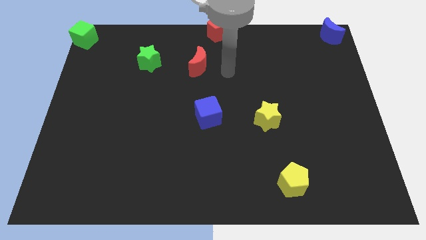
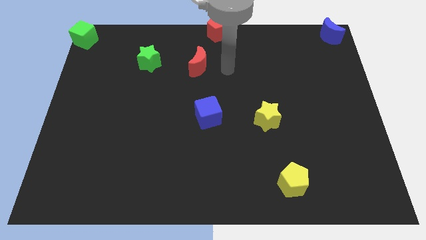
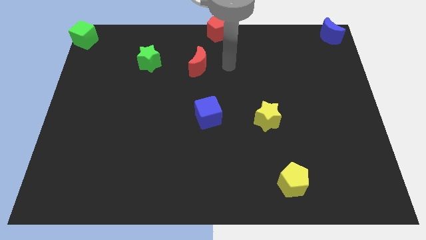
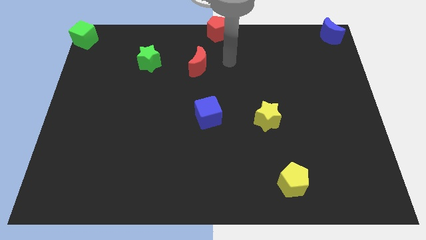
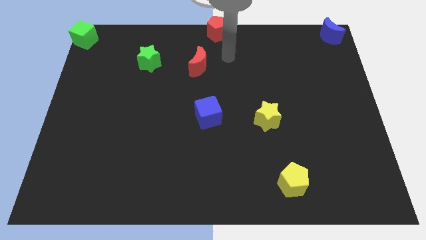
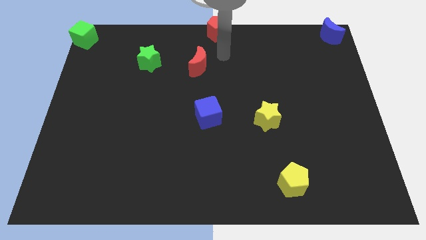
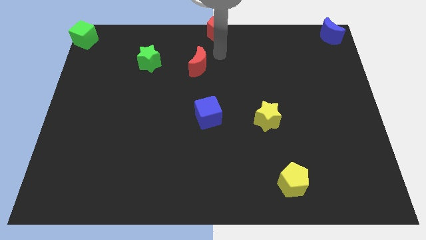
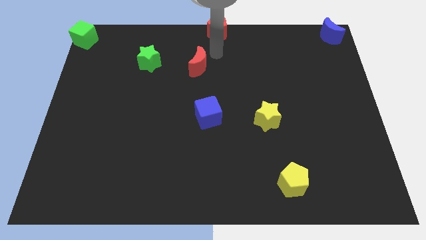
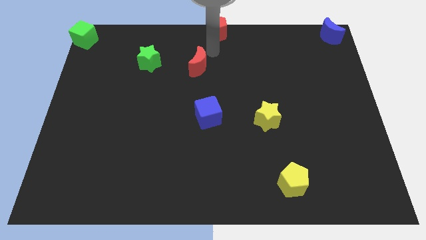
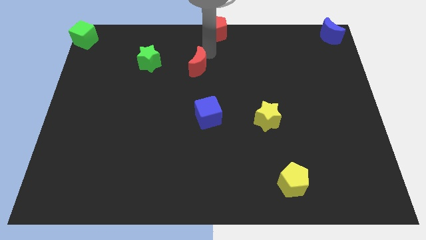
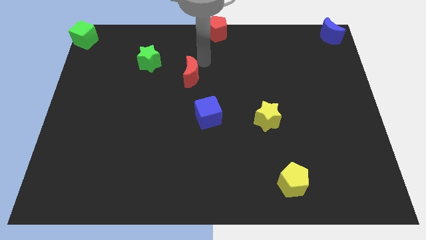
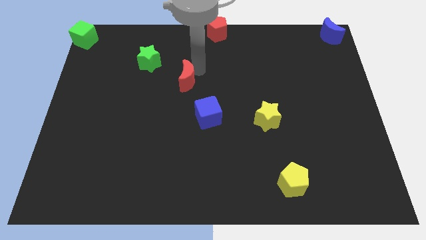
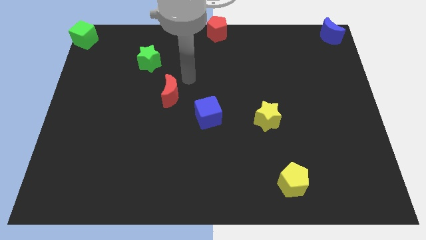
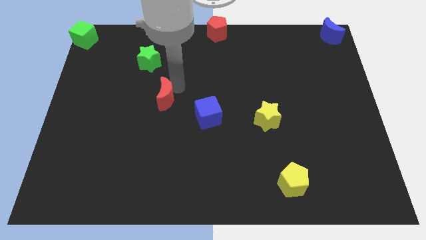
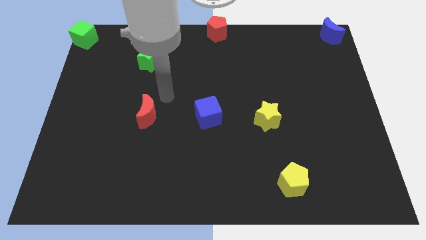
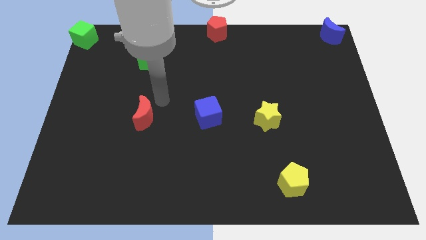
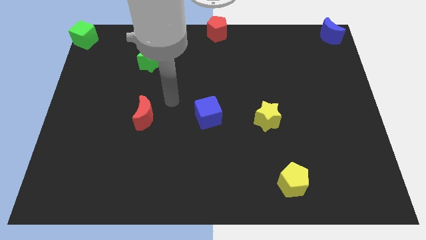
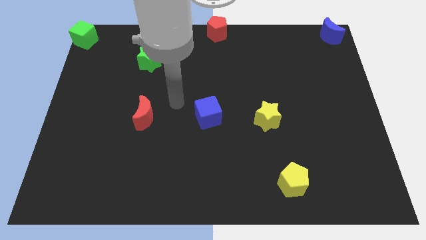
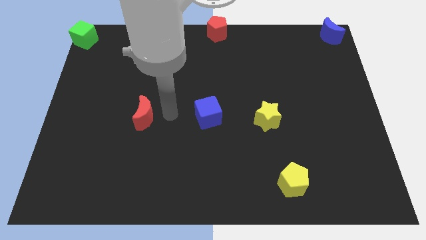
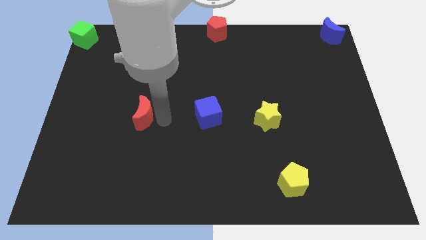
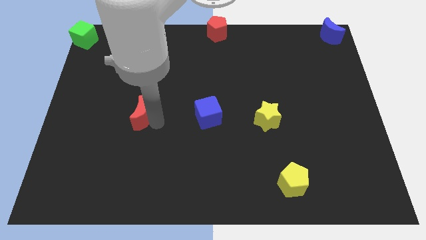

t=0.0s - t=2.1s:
move red moon to the left of blue cube

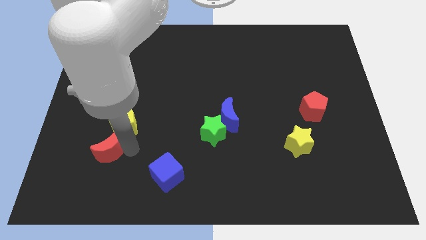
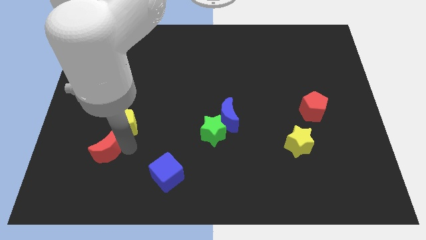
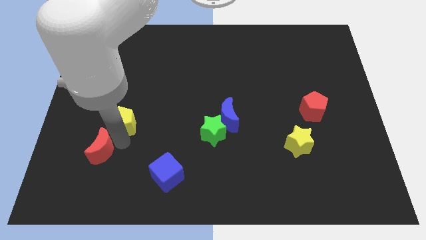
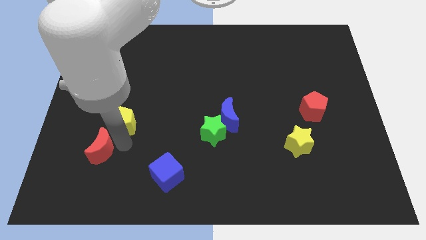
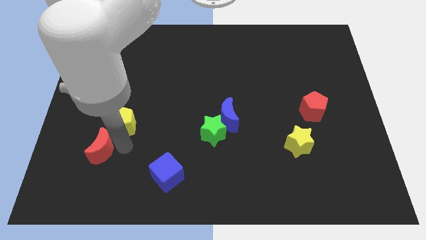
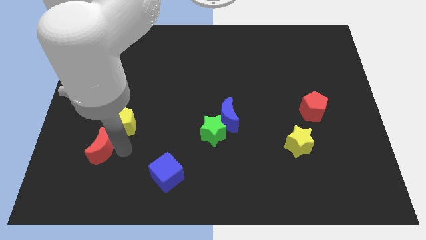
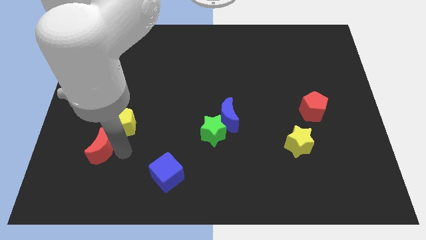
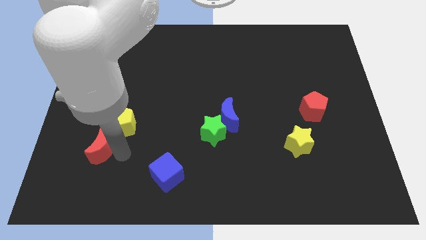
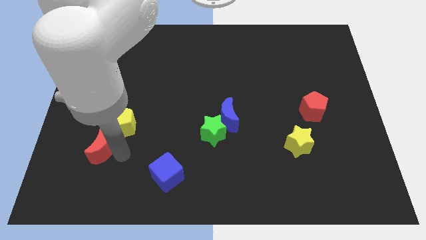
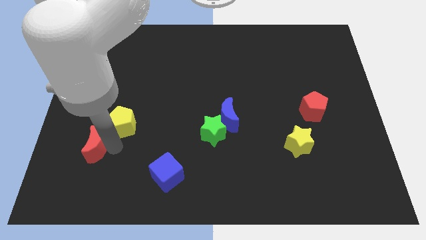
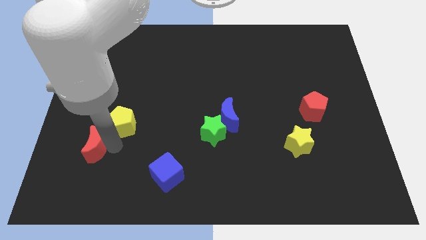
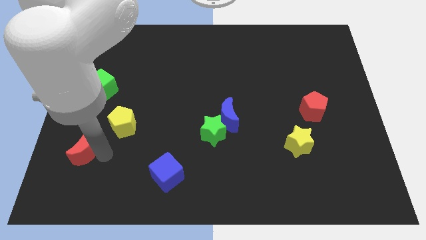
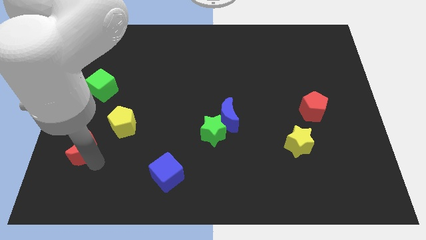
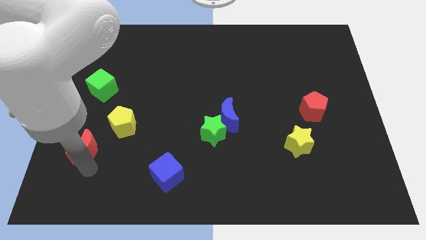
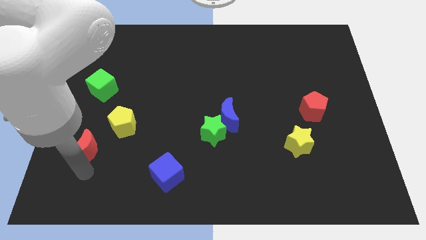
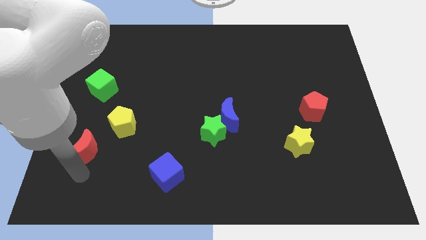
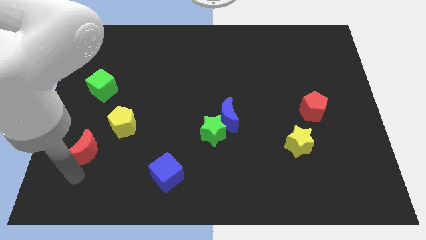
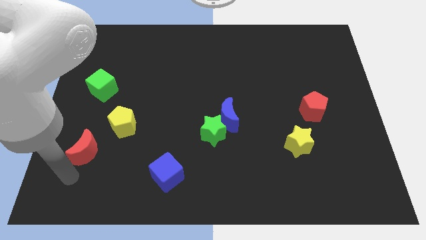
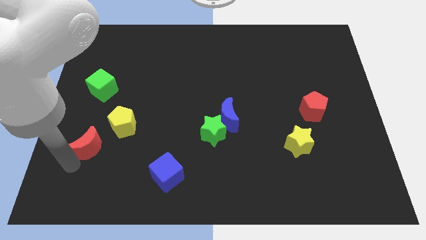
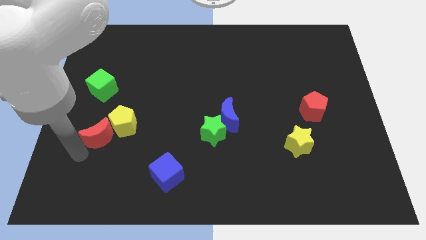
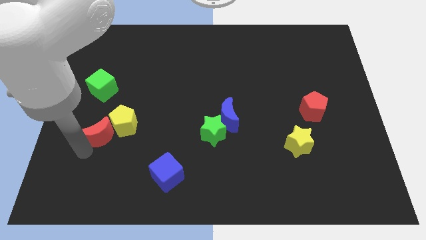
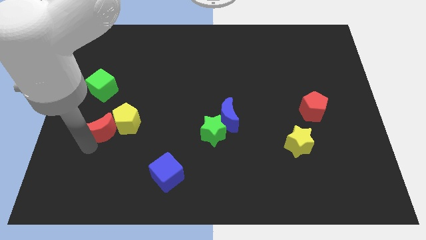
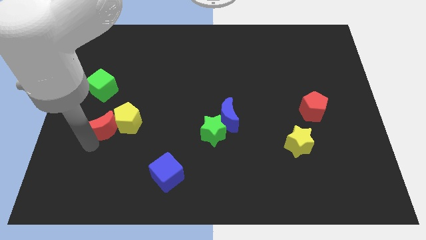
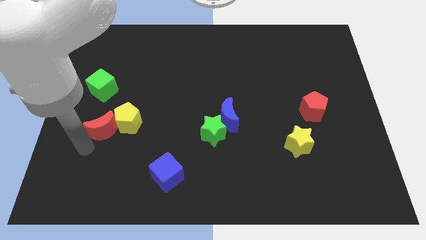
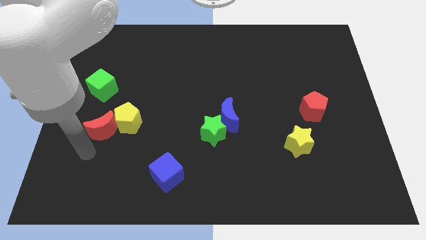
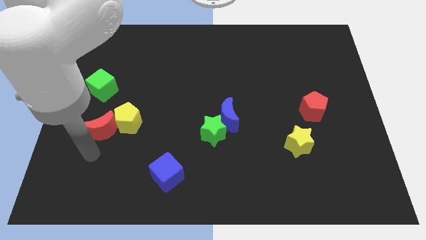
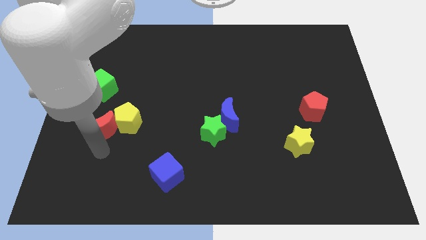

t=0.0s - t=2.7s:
push the red crescent to the left of the yellow pentagon

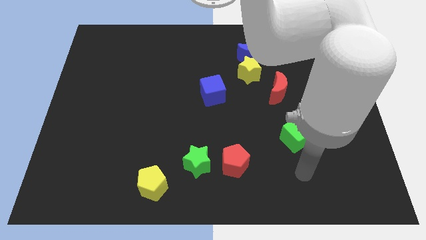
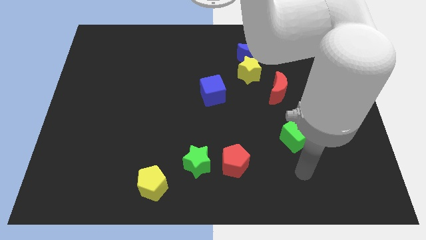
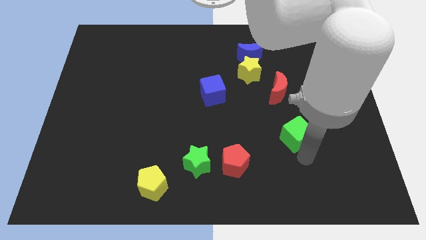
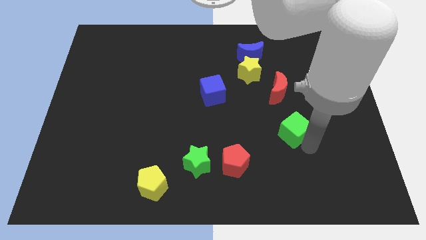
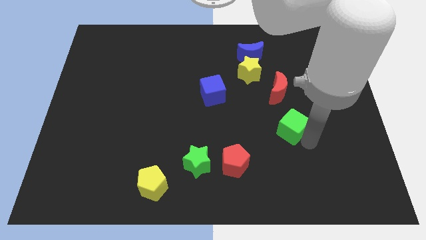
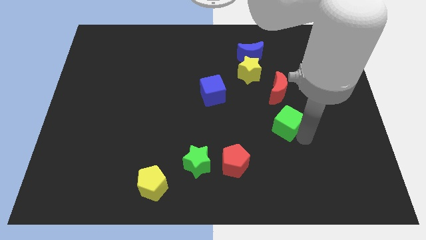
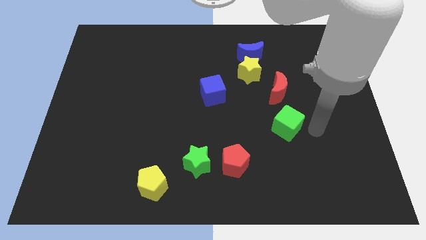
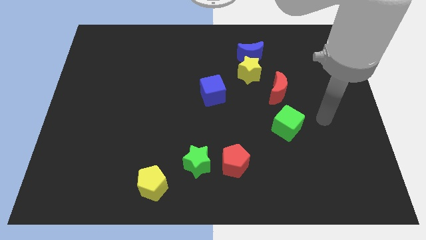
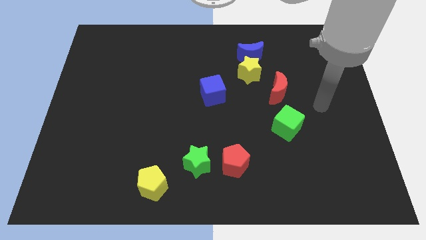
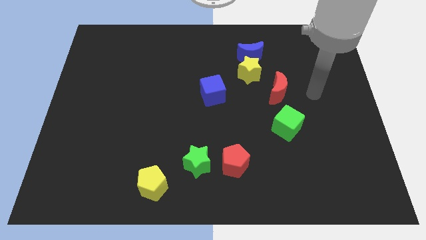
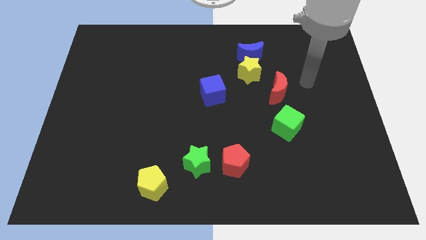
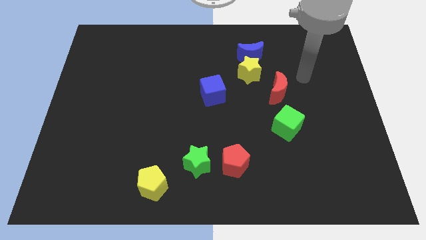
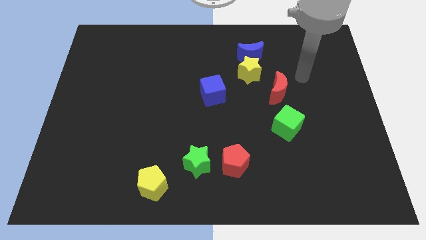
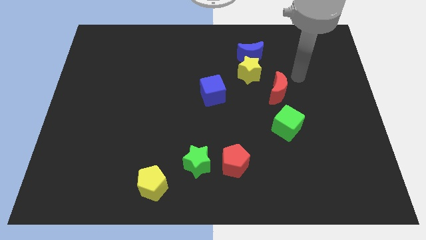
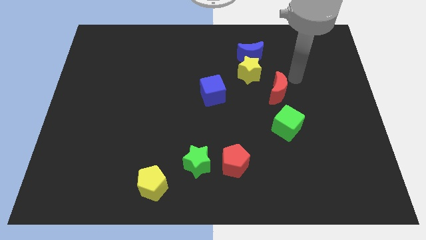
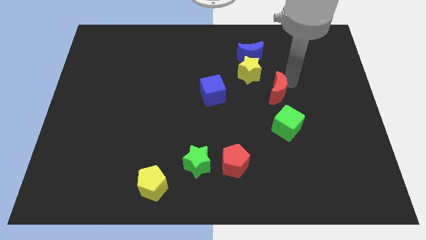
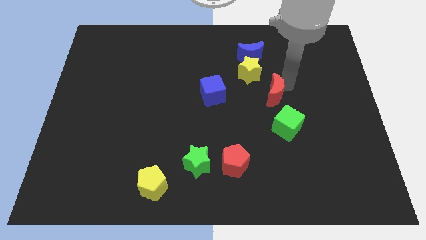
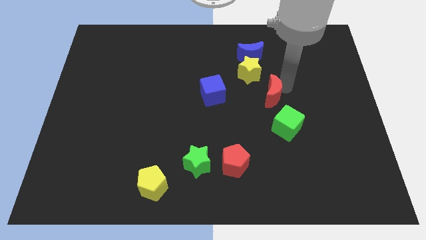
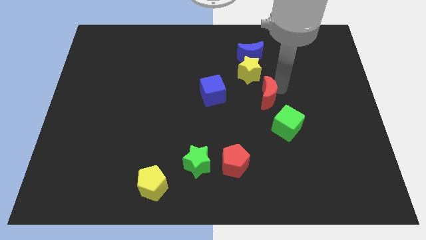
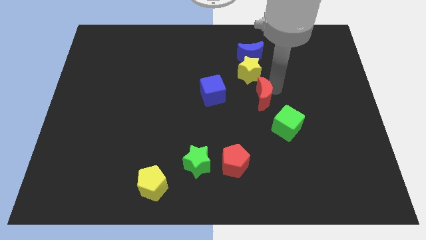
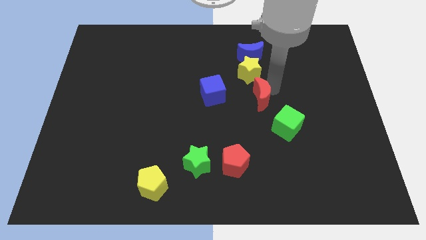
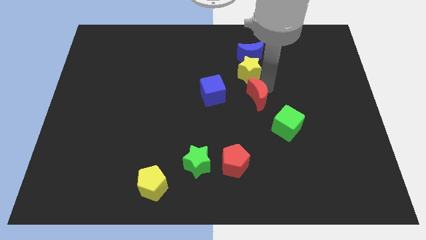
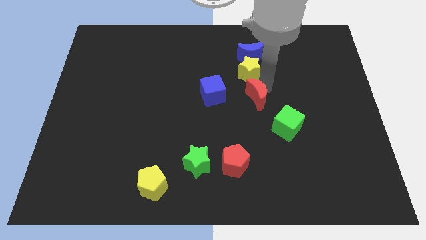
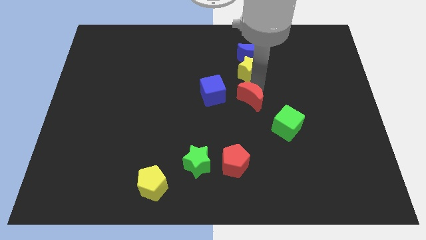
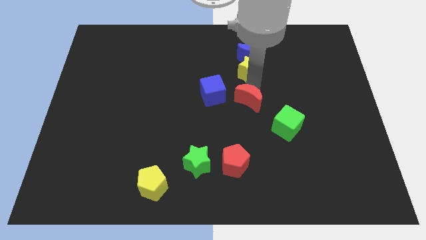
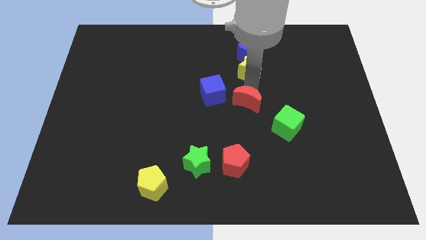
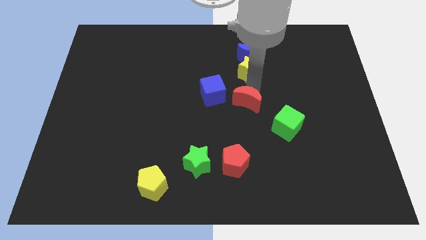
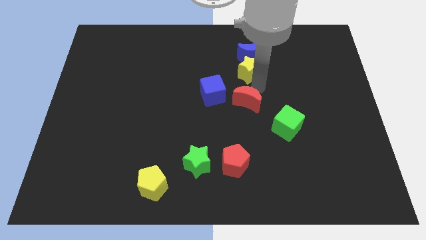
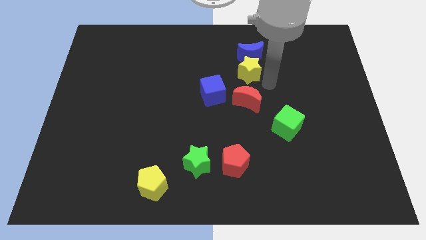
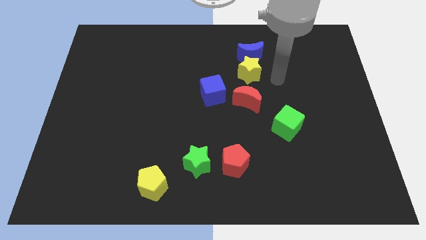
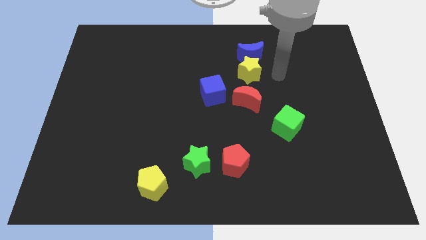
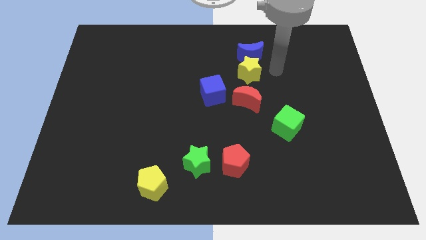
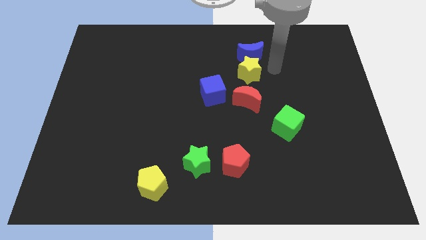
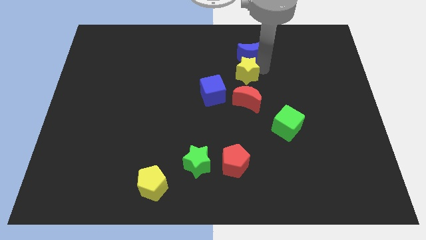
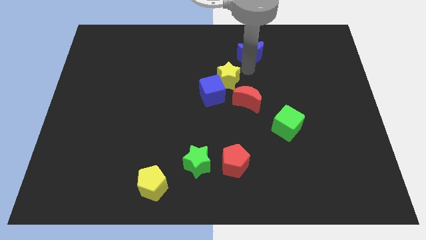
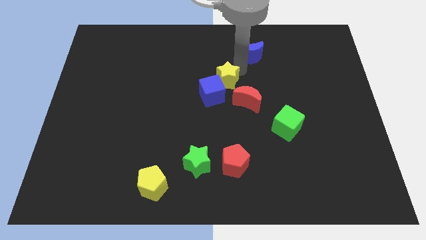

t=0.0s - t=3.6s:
slightly move the red crescent and the green cube towards the center of the board

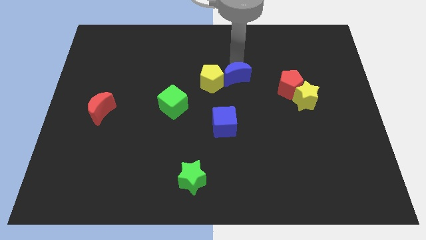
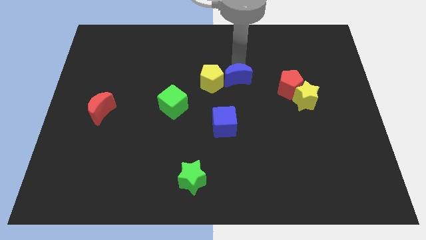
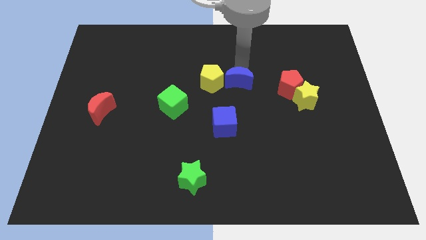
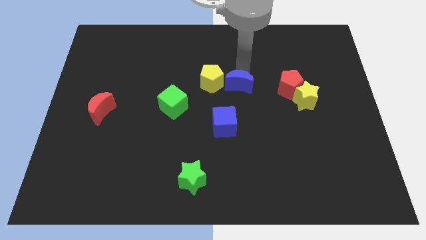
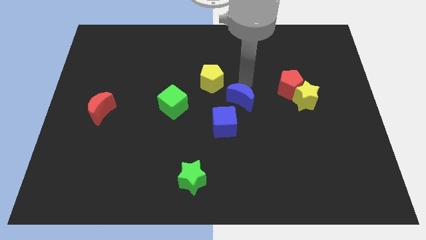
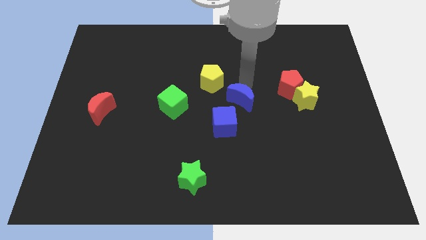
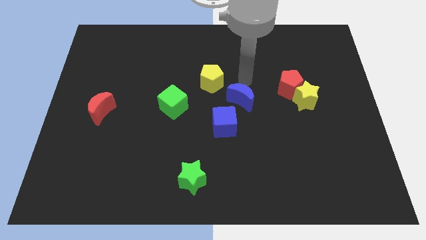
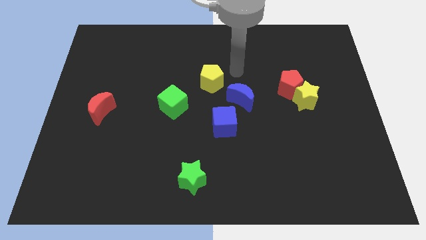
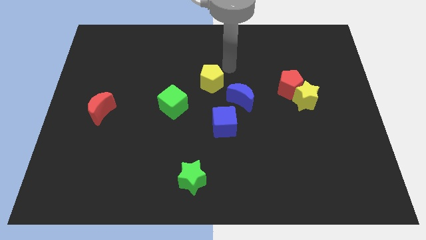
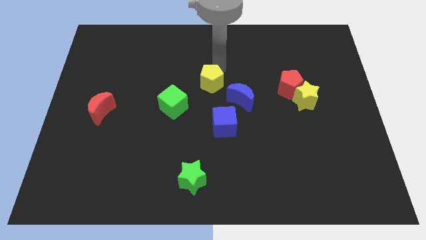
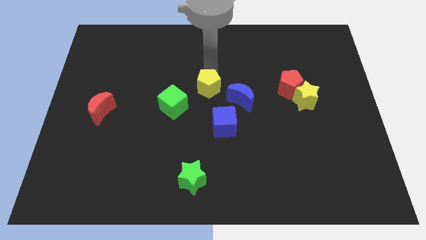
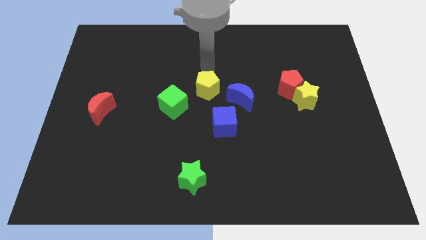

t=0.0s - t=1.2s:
move the blue moon towards the blue cube
